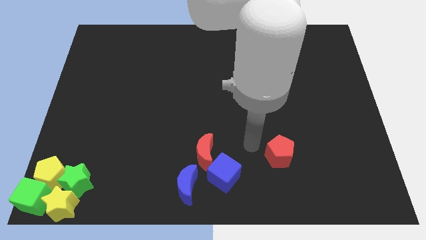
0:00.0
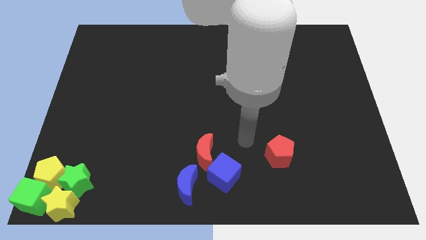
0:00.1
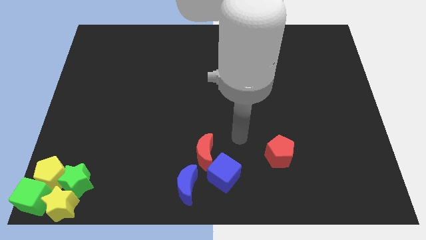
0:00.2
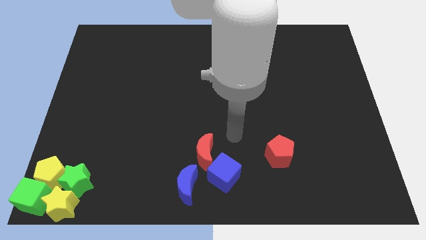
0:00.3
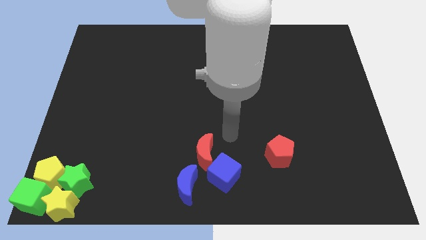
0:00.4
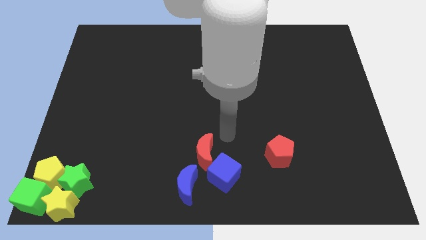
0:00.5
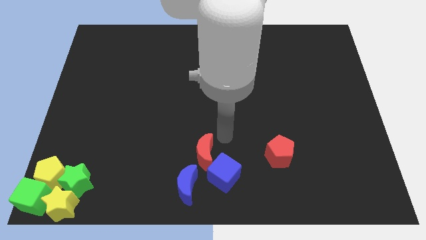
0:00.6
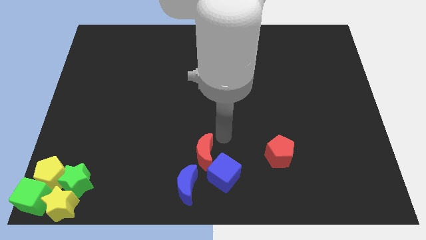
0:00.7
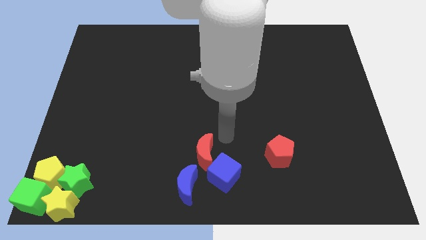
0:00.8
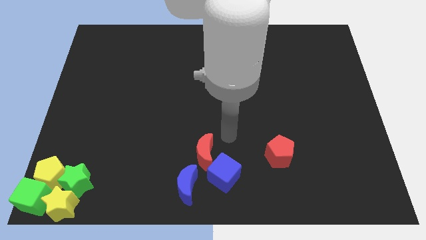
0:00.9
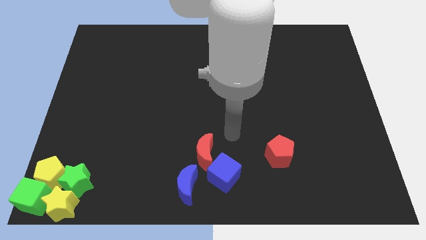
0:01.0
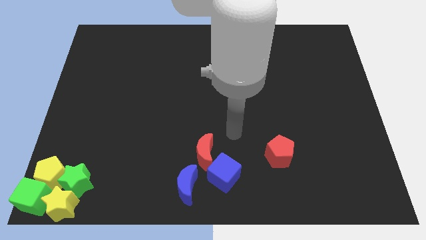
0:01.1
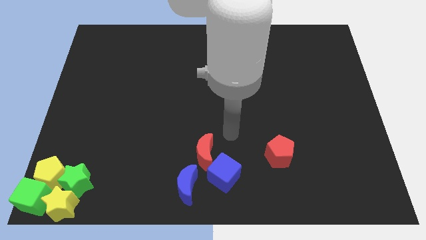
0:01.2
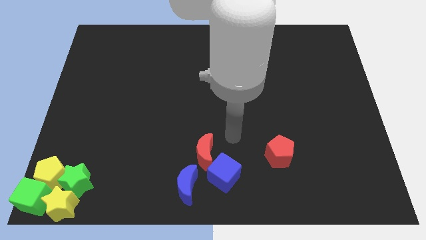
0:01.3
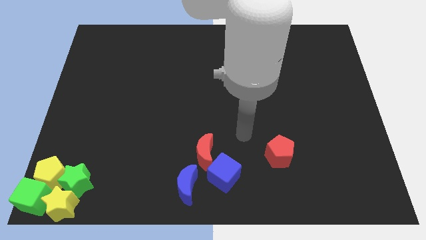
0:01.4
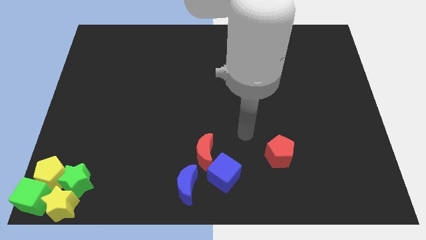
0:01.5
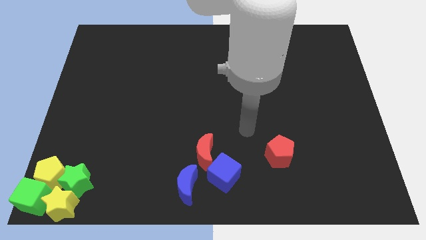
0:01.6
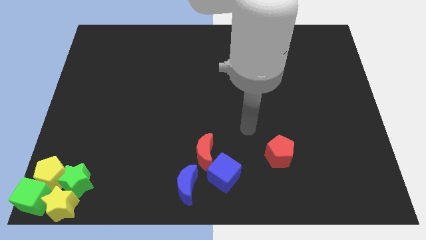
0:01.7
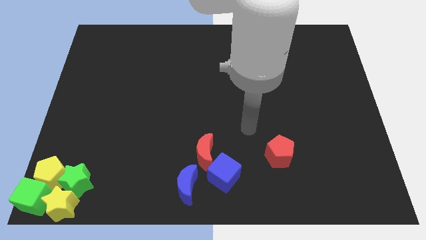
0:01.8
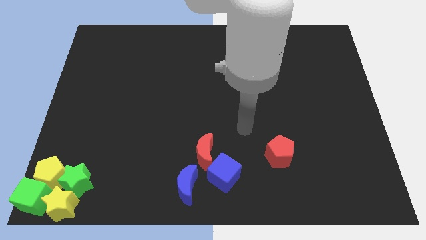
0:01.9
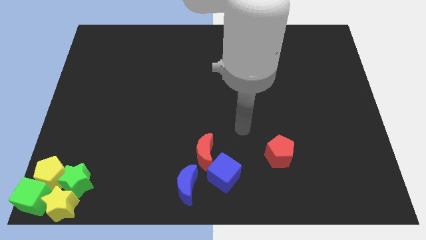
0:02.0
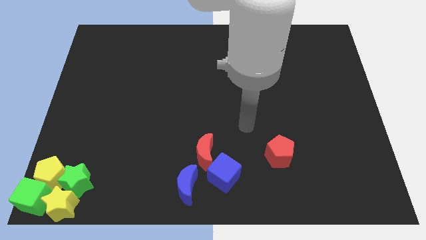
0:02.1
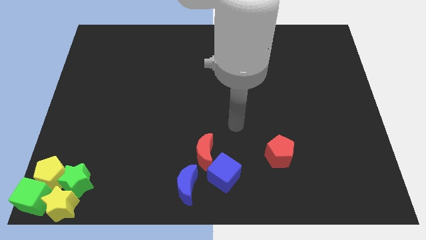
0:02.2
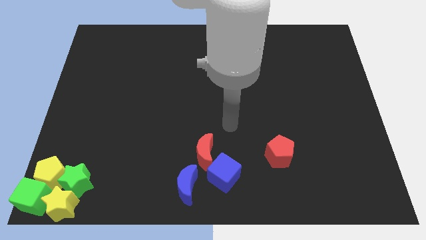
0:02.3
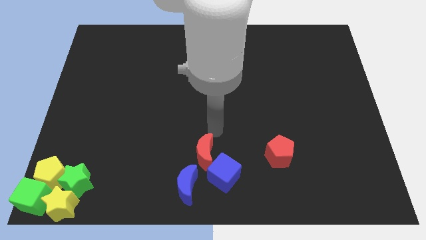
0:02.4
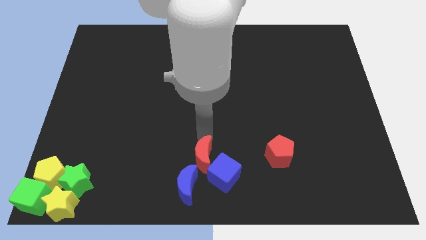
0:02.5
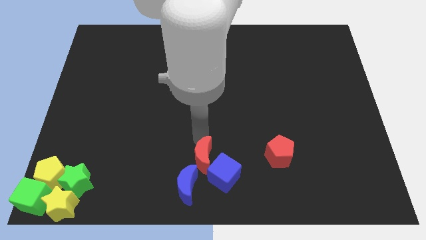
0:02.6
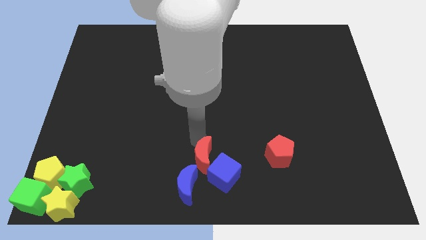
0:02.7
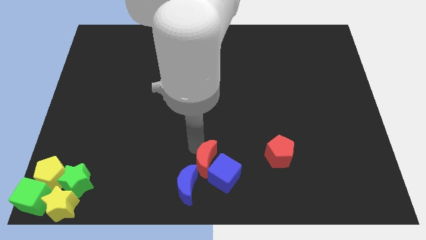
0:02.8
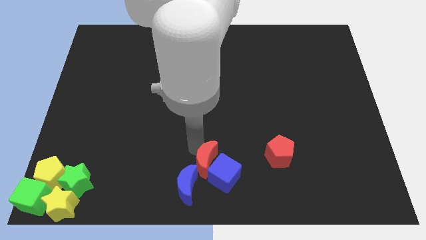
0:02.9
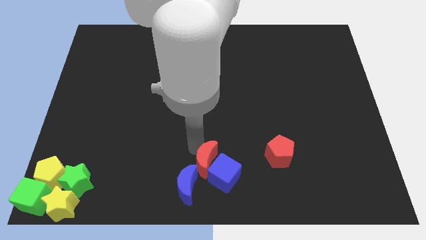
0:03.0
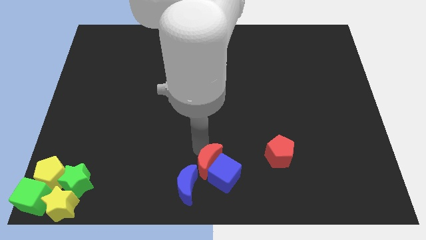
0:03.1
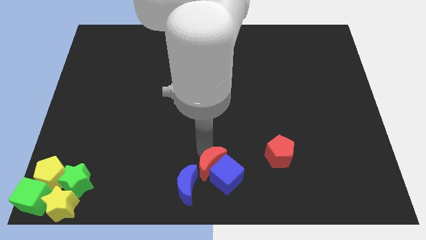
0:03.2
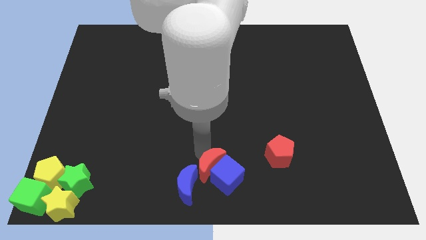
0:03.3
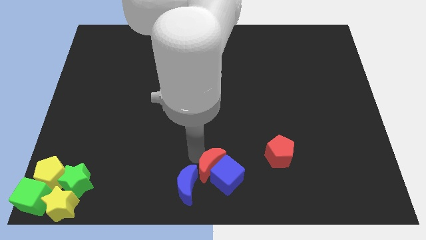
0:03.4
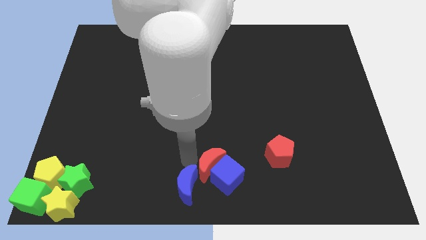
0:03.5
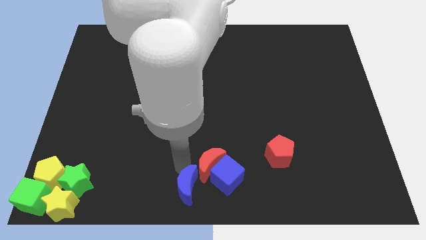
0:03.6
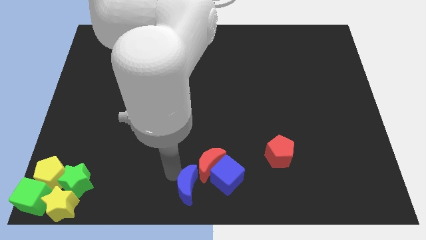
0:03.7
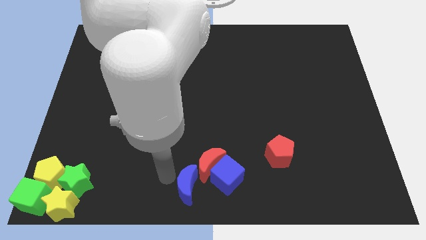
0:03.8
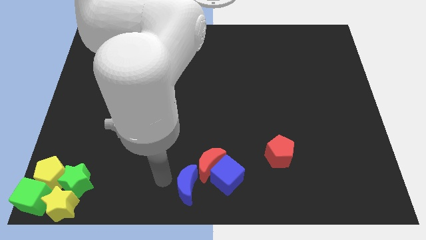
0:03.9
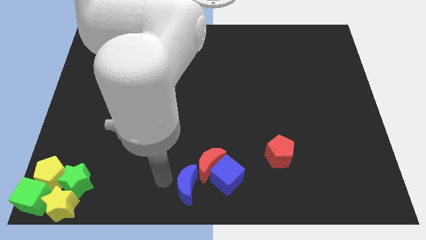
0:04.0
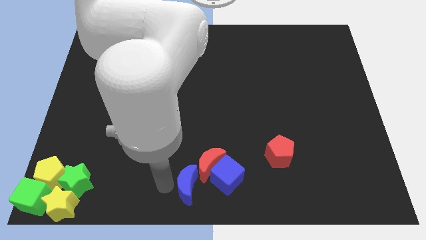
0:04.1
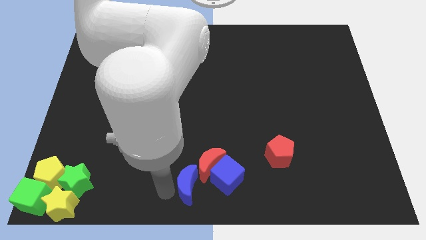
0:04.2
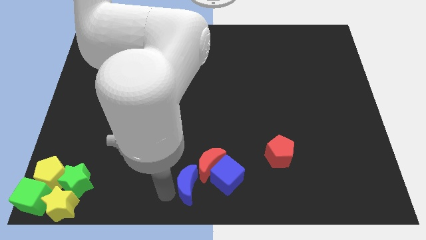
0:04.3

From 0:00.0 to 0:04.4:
place red crescent into blue block

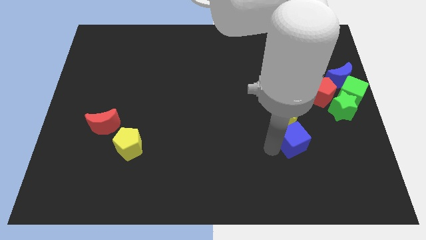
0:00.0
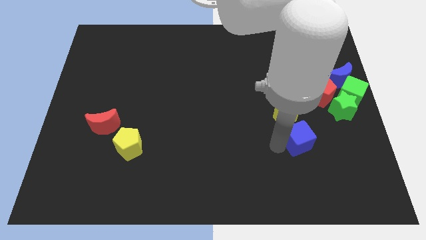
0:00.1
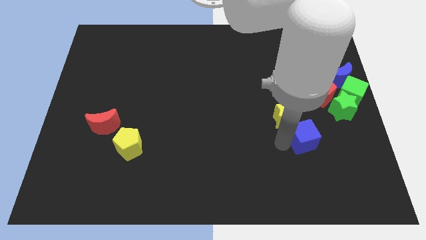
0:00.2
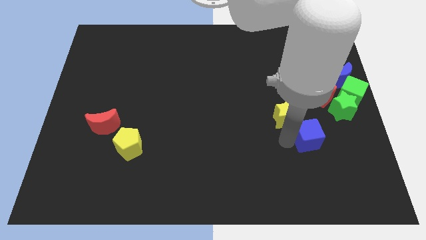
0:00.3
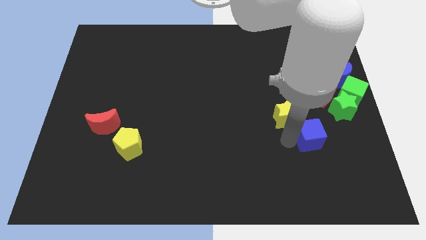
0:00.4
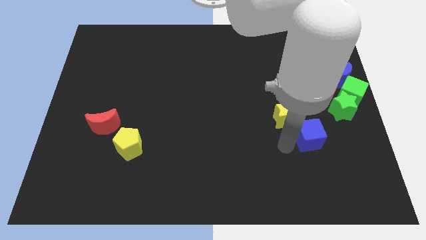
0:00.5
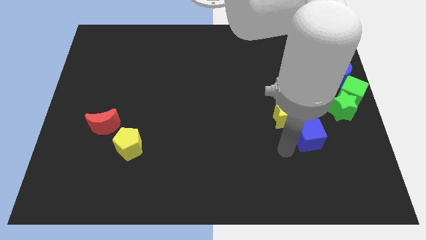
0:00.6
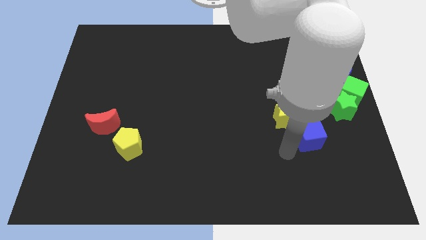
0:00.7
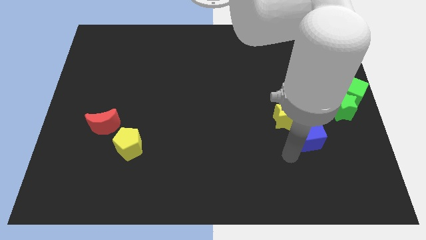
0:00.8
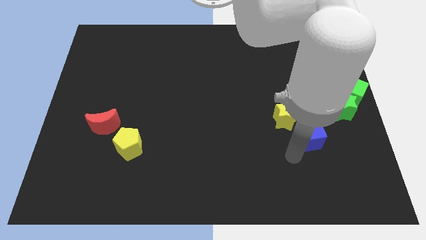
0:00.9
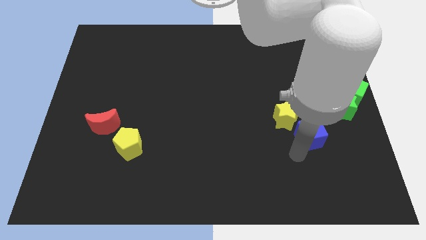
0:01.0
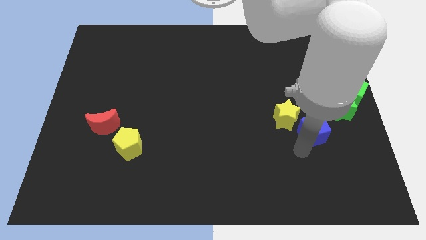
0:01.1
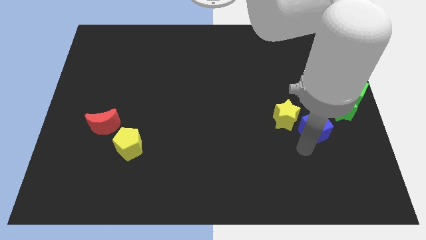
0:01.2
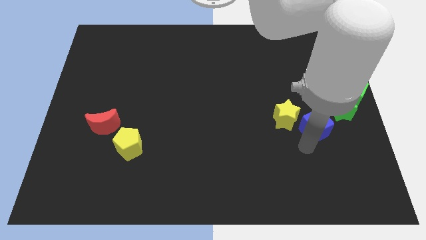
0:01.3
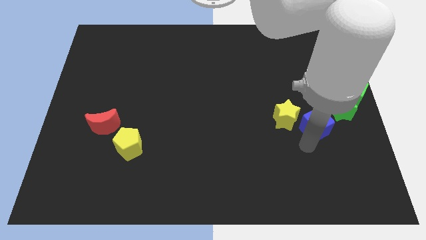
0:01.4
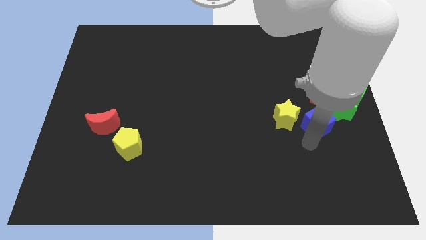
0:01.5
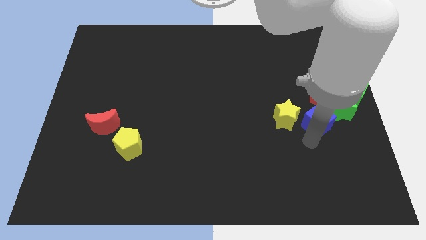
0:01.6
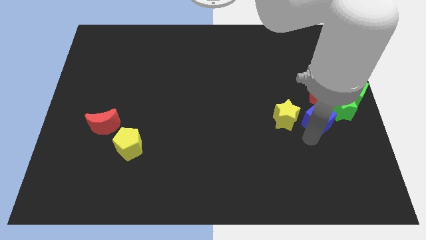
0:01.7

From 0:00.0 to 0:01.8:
push the blue cube to the right of the yellow star

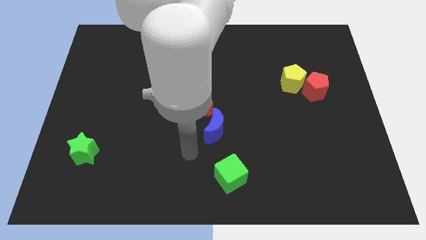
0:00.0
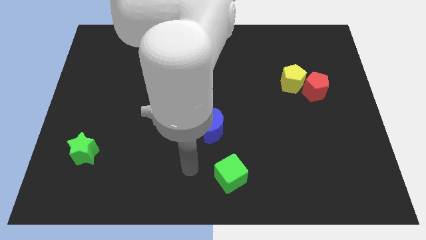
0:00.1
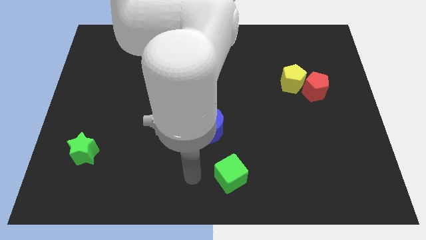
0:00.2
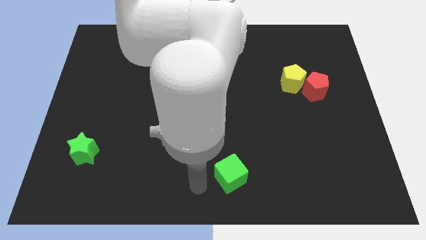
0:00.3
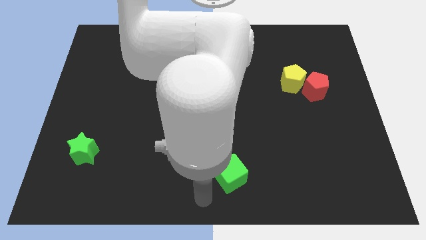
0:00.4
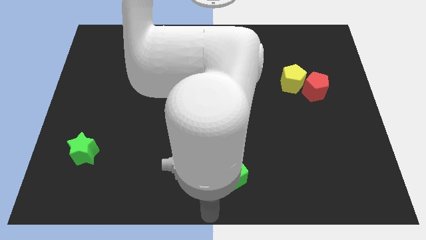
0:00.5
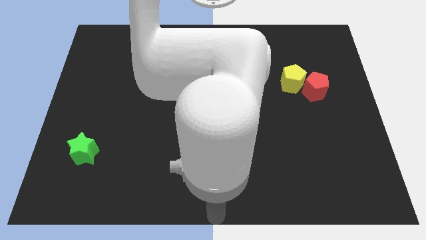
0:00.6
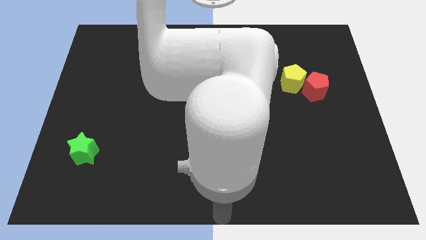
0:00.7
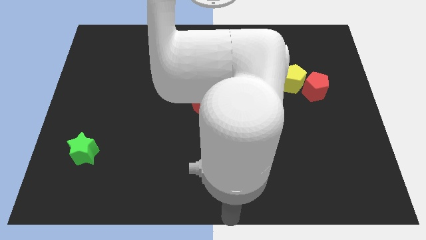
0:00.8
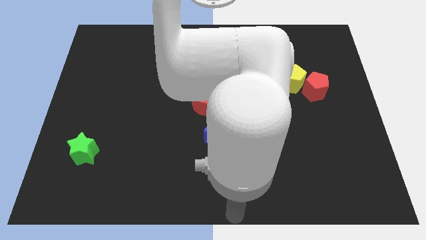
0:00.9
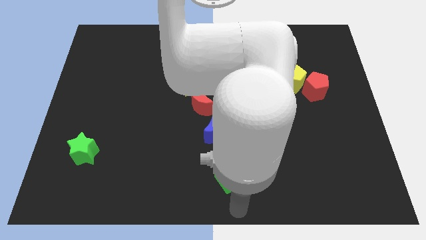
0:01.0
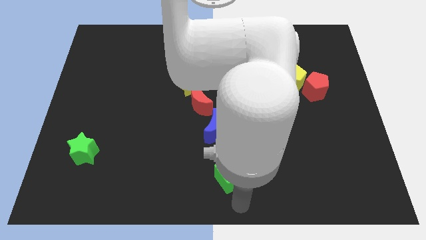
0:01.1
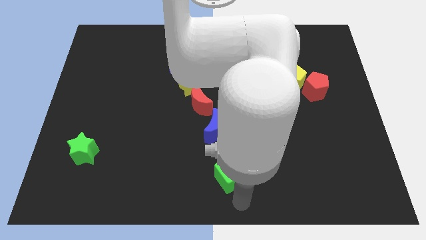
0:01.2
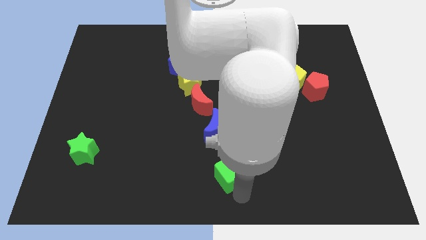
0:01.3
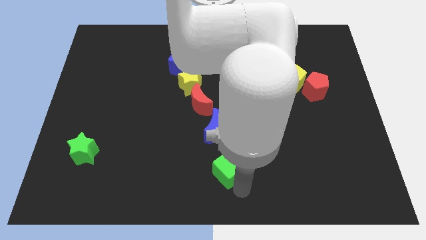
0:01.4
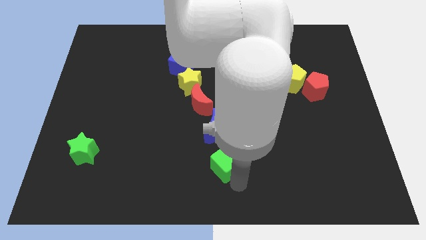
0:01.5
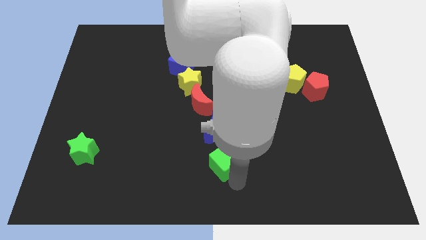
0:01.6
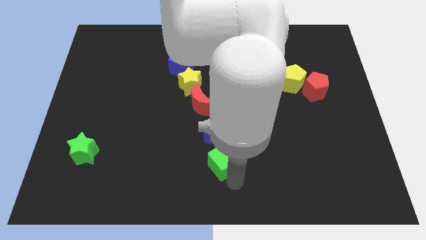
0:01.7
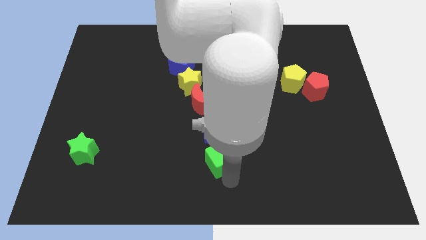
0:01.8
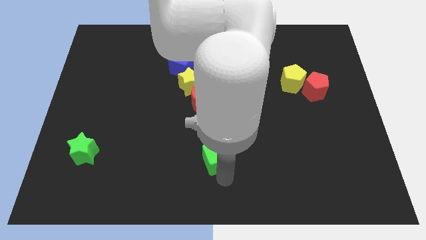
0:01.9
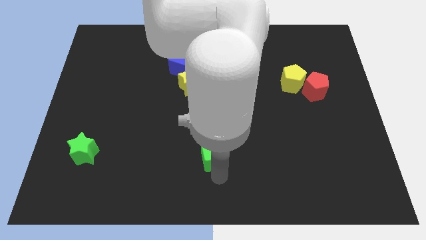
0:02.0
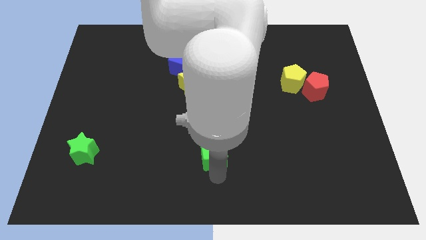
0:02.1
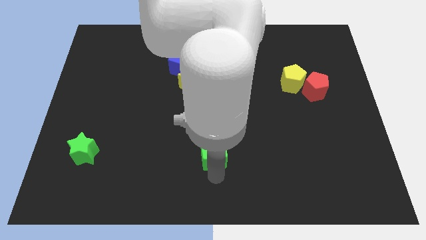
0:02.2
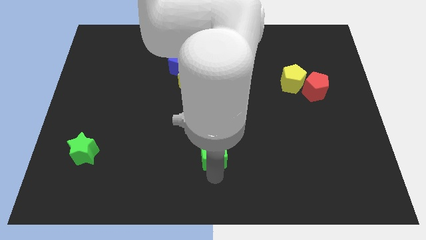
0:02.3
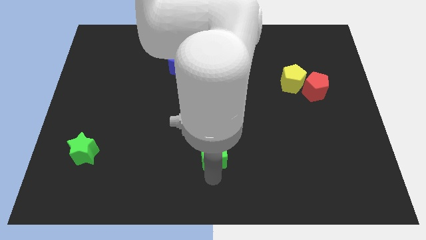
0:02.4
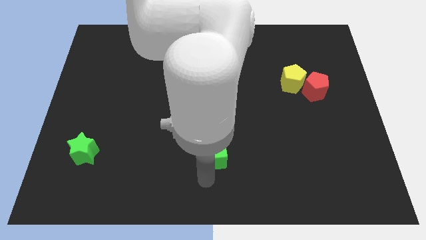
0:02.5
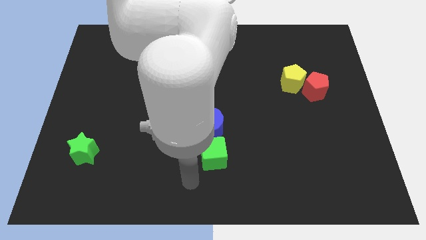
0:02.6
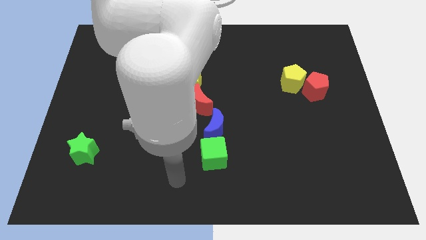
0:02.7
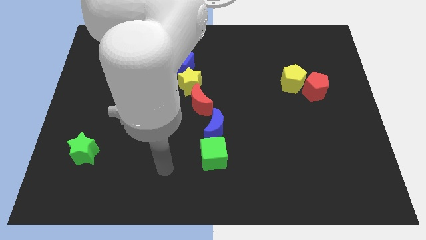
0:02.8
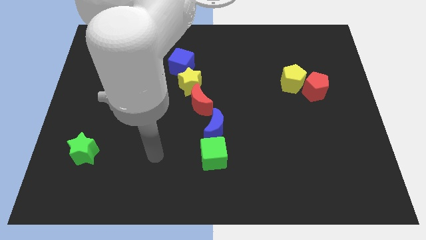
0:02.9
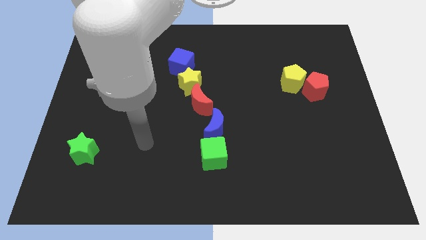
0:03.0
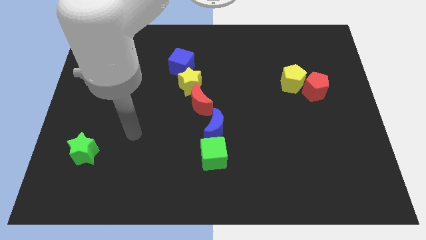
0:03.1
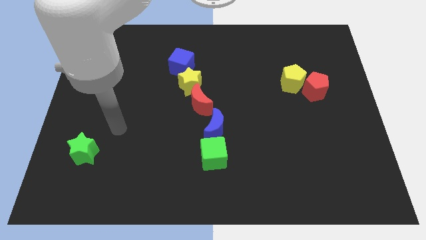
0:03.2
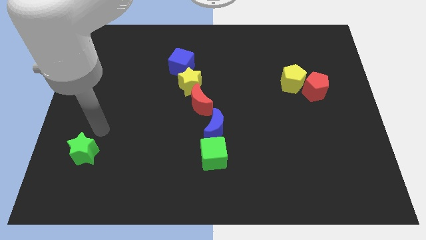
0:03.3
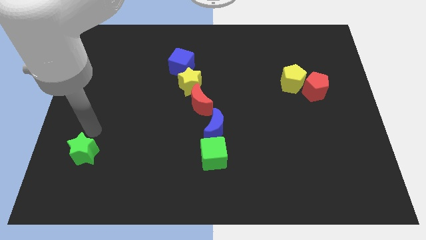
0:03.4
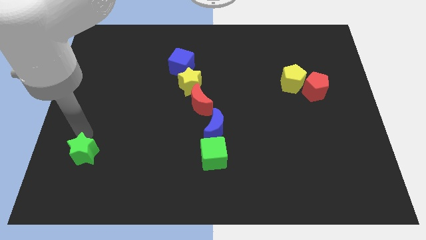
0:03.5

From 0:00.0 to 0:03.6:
push the green cube below the blue crescent
